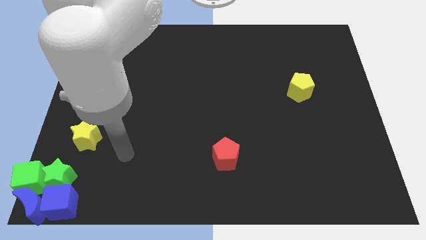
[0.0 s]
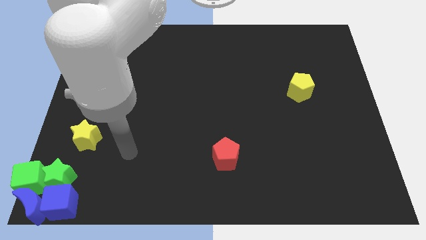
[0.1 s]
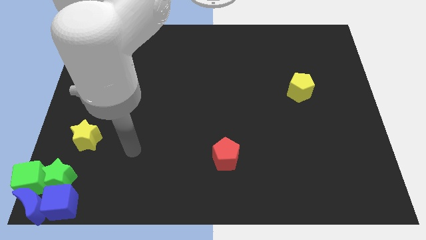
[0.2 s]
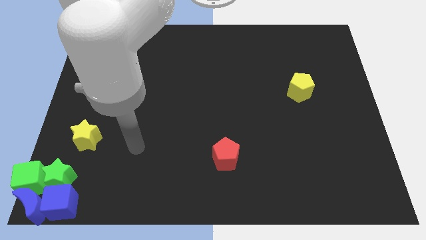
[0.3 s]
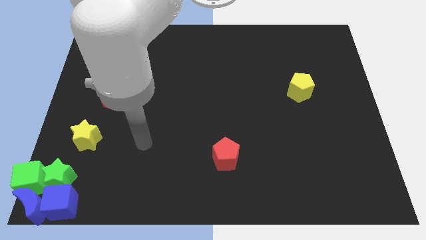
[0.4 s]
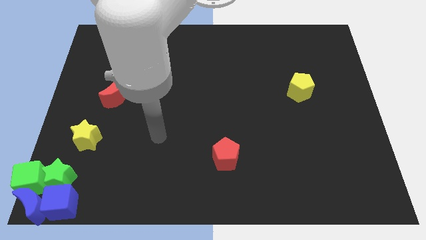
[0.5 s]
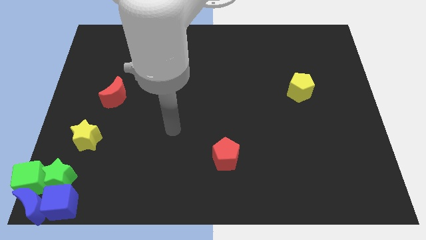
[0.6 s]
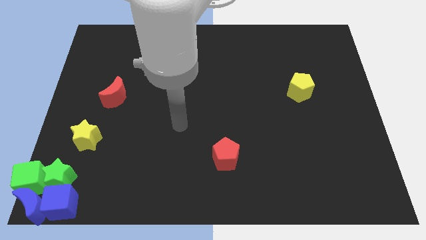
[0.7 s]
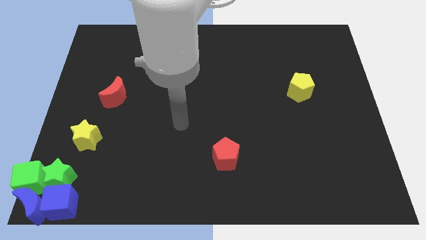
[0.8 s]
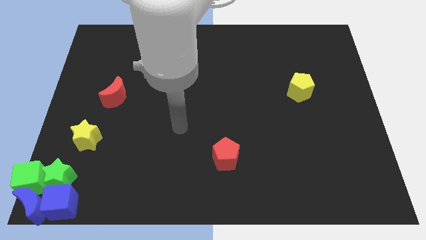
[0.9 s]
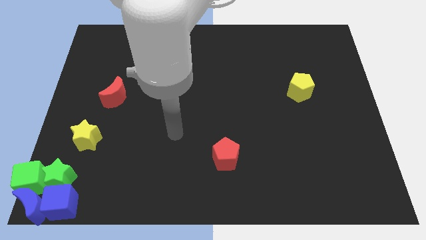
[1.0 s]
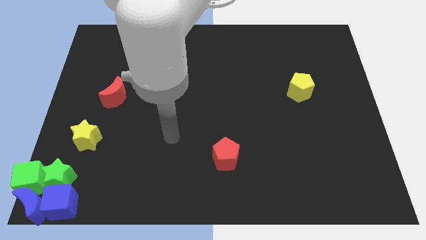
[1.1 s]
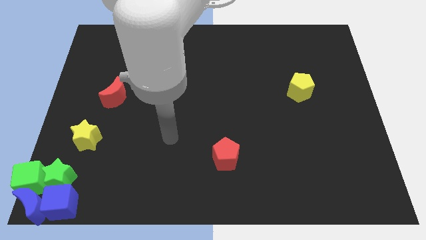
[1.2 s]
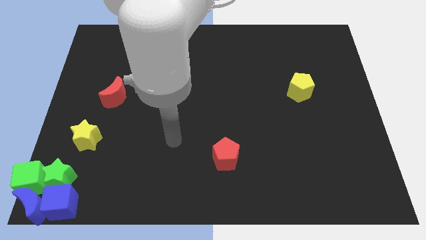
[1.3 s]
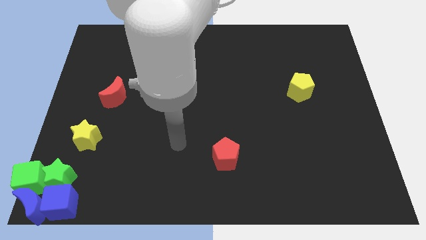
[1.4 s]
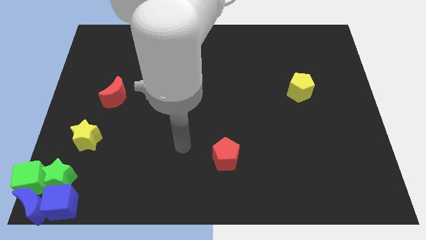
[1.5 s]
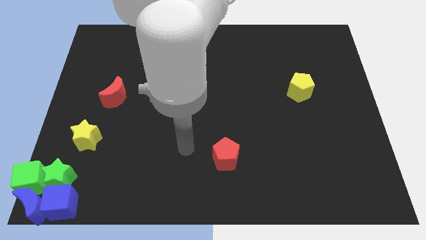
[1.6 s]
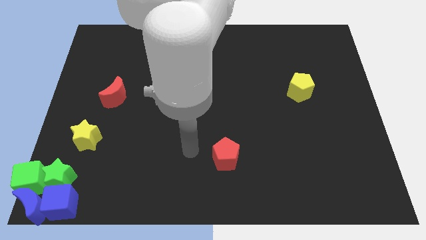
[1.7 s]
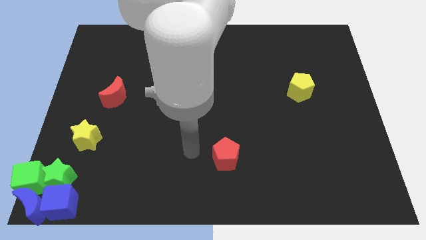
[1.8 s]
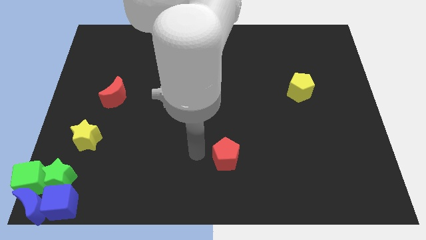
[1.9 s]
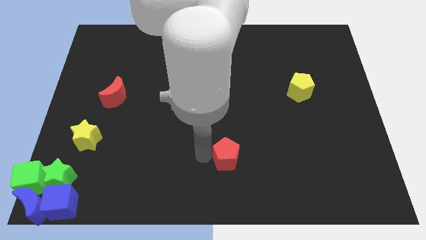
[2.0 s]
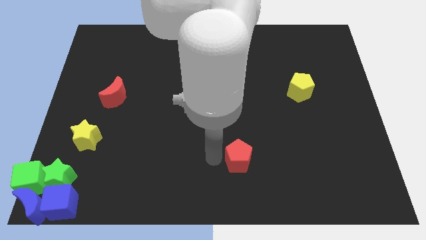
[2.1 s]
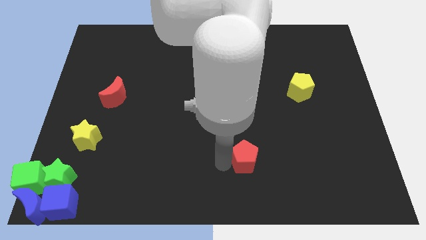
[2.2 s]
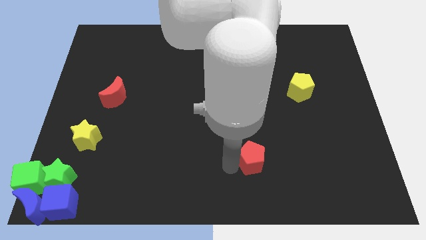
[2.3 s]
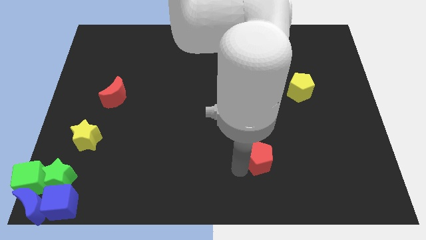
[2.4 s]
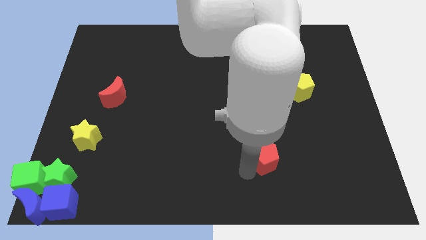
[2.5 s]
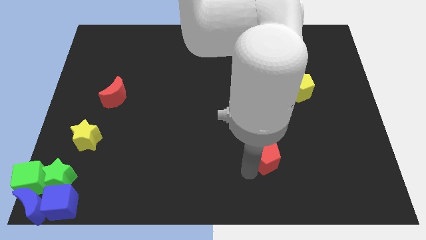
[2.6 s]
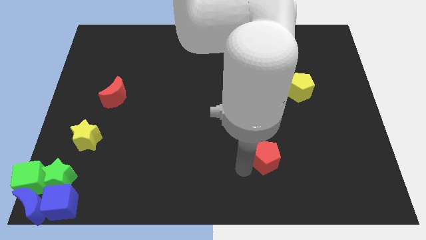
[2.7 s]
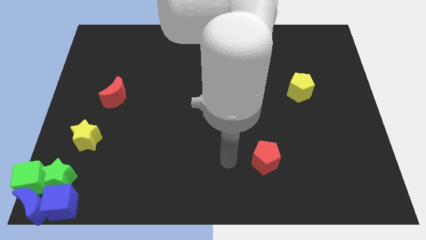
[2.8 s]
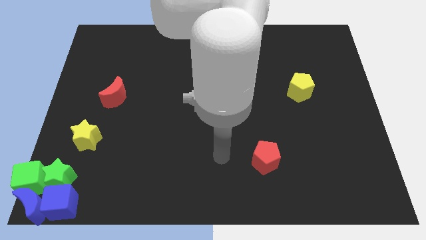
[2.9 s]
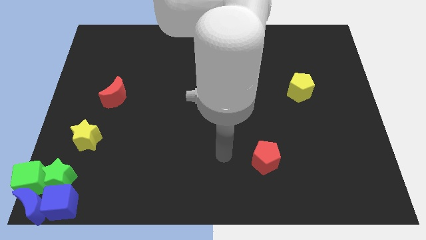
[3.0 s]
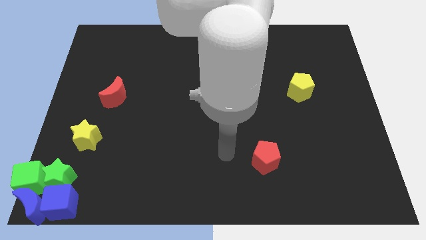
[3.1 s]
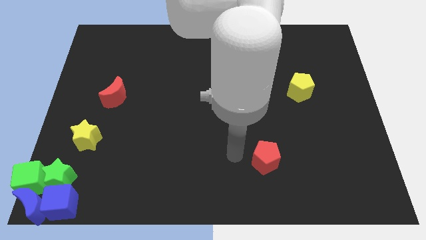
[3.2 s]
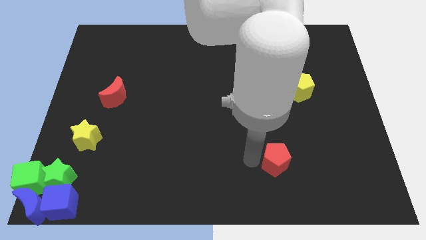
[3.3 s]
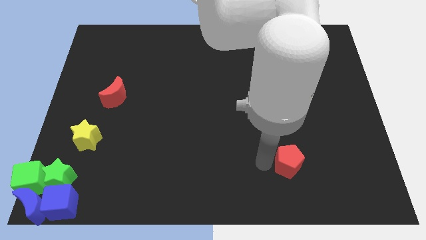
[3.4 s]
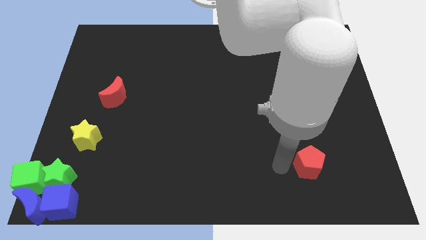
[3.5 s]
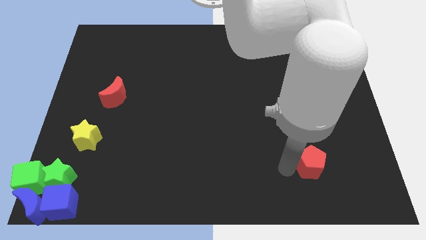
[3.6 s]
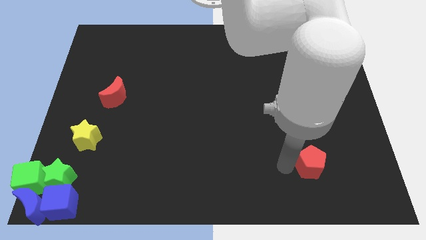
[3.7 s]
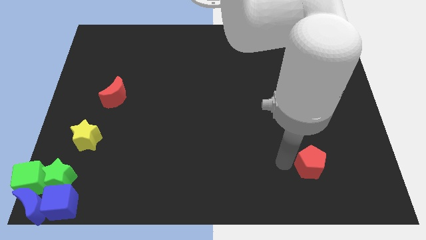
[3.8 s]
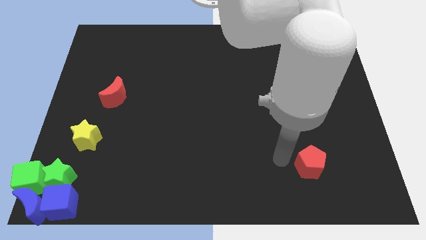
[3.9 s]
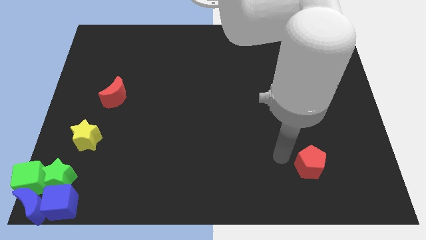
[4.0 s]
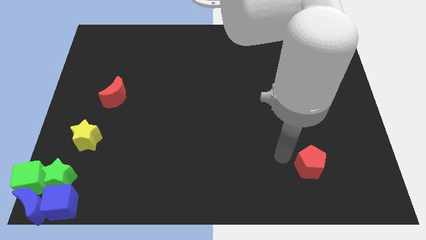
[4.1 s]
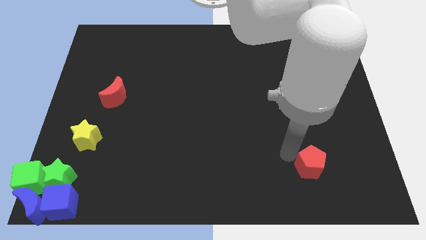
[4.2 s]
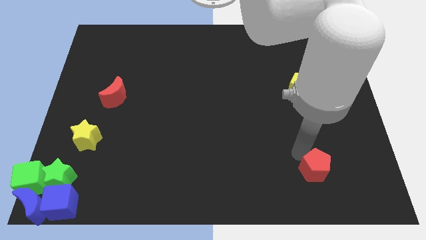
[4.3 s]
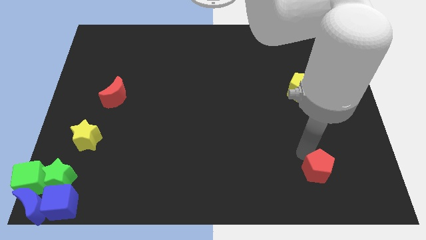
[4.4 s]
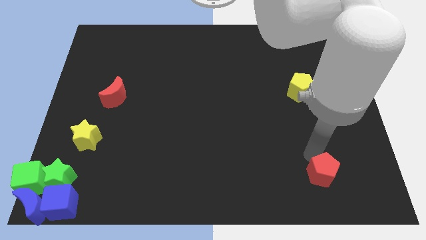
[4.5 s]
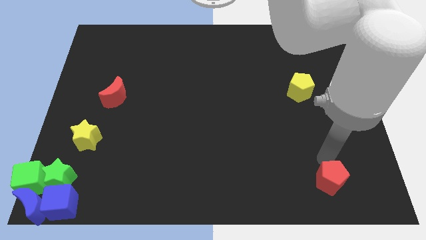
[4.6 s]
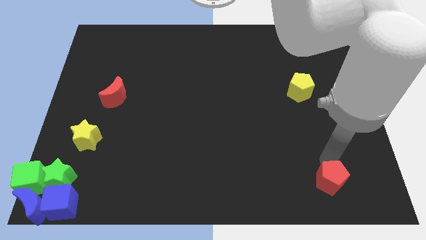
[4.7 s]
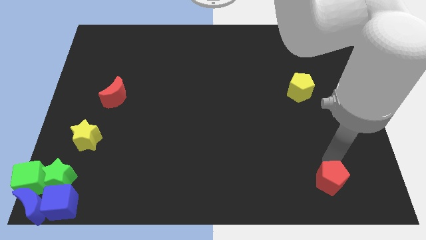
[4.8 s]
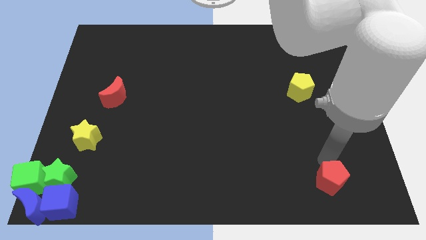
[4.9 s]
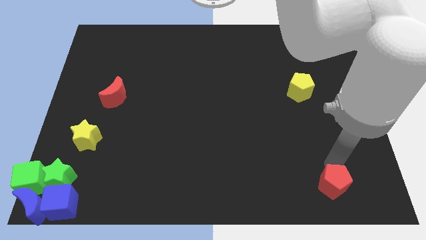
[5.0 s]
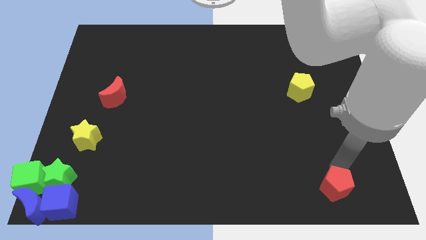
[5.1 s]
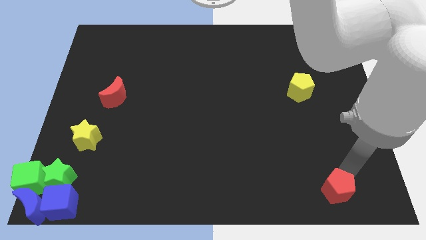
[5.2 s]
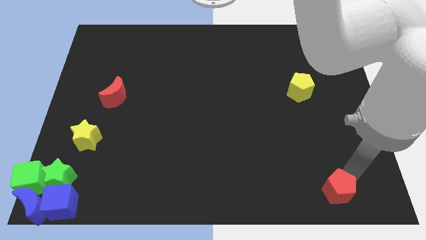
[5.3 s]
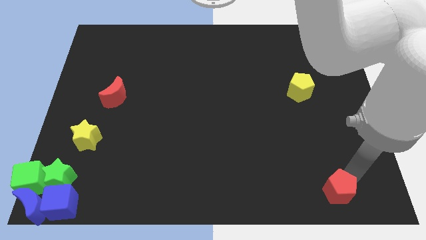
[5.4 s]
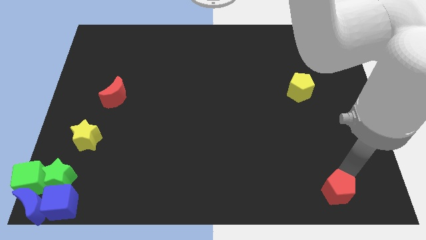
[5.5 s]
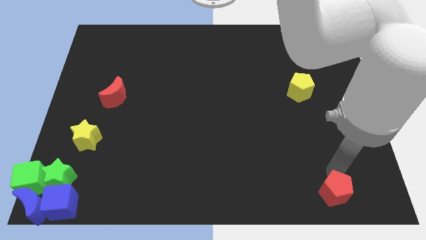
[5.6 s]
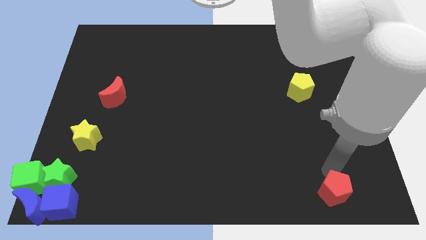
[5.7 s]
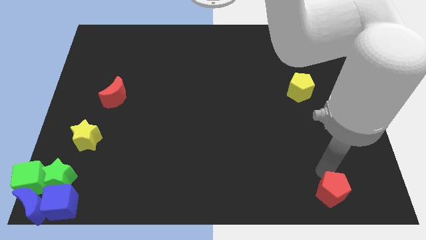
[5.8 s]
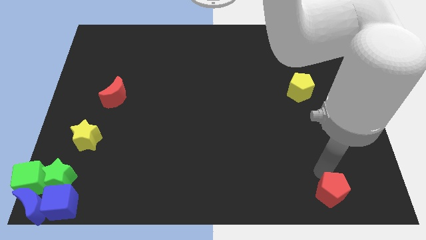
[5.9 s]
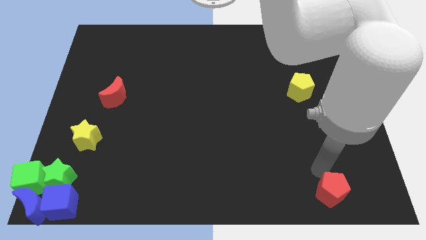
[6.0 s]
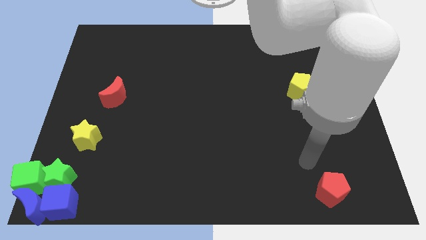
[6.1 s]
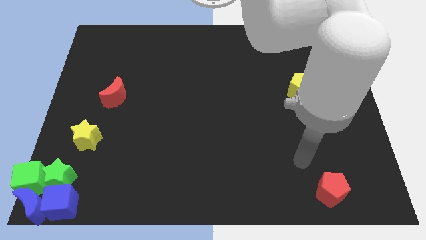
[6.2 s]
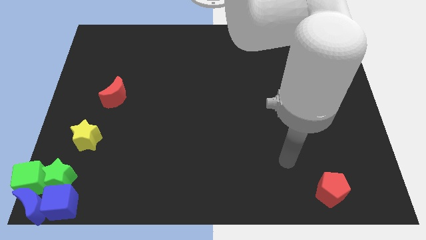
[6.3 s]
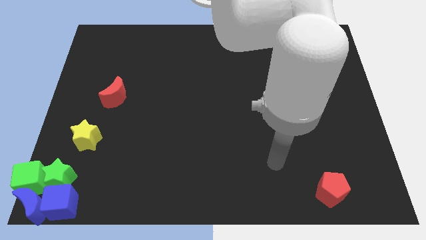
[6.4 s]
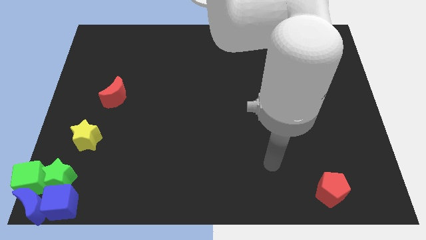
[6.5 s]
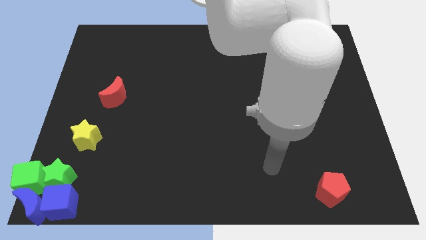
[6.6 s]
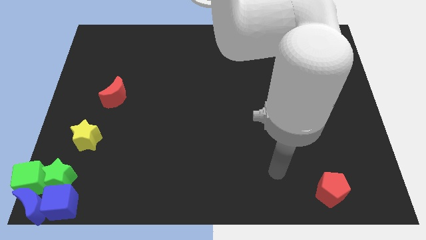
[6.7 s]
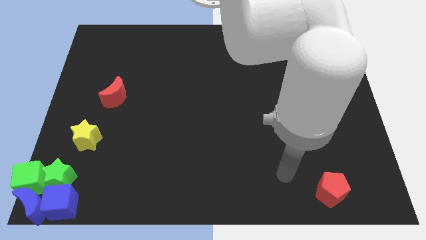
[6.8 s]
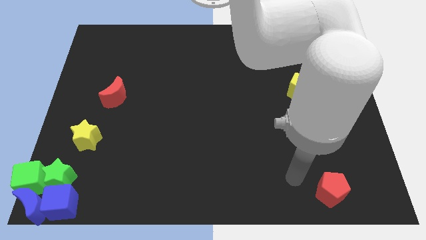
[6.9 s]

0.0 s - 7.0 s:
move the red pentagon towards the bottom right of the board

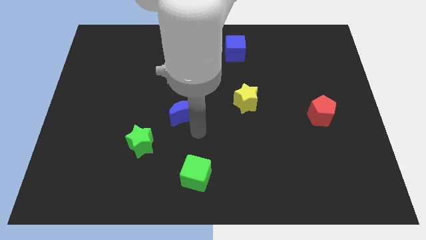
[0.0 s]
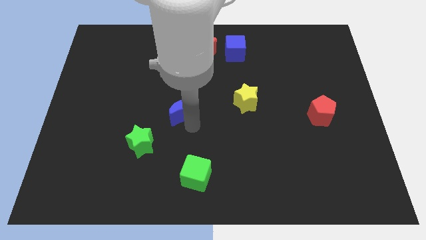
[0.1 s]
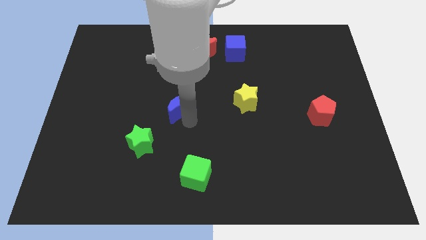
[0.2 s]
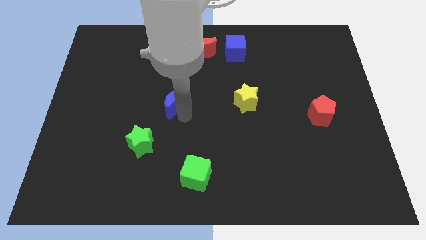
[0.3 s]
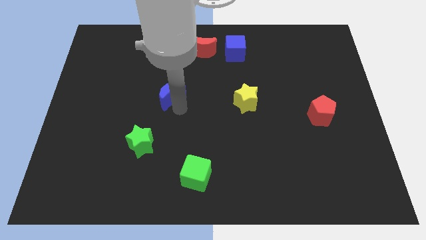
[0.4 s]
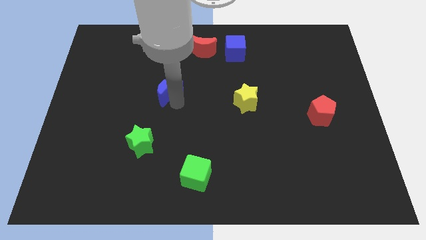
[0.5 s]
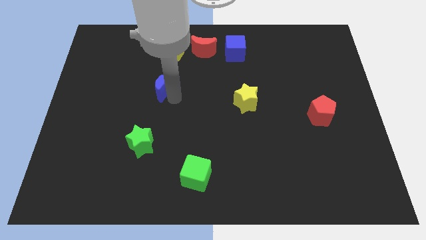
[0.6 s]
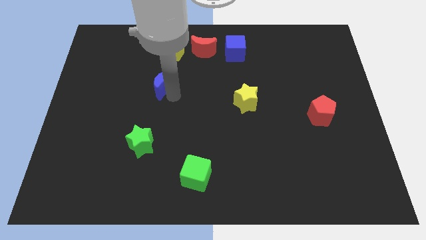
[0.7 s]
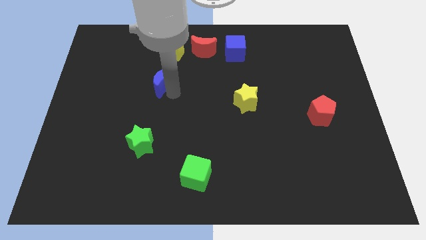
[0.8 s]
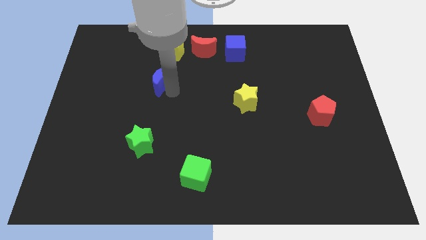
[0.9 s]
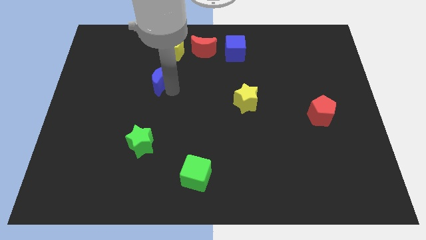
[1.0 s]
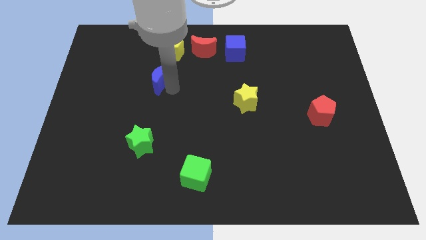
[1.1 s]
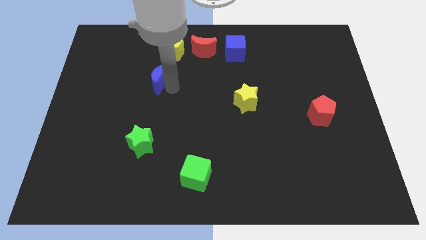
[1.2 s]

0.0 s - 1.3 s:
move blue moon towards yellow pentagon

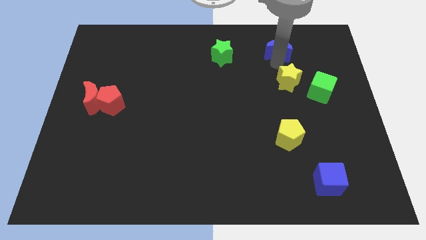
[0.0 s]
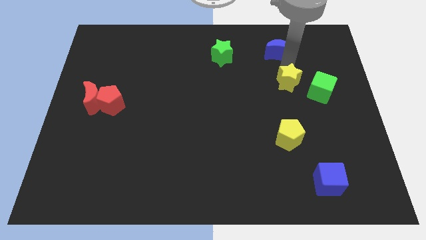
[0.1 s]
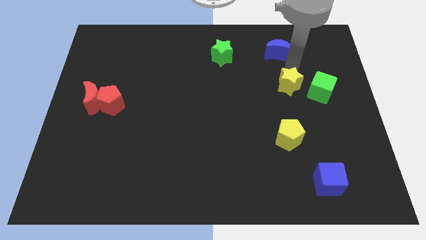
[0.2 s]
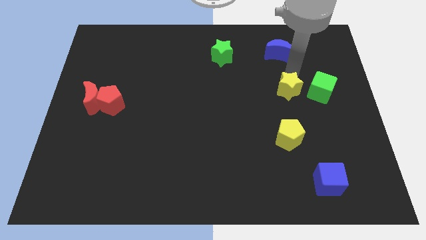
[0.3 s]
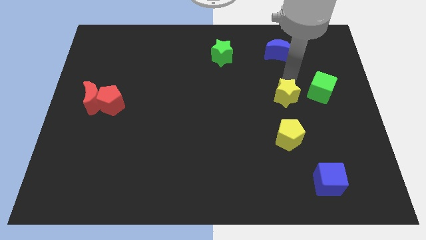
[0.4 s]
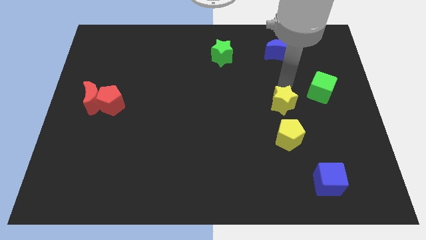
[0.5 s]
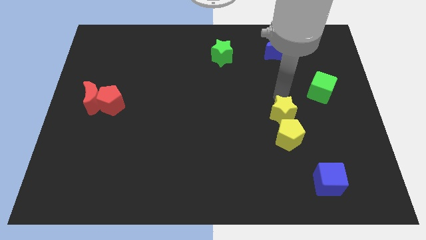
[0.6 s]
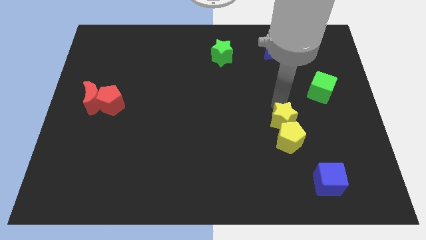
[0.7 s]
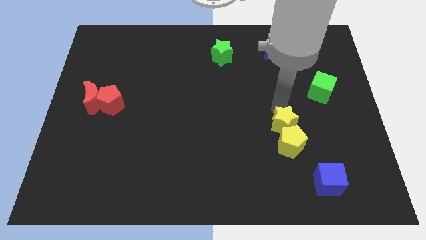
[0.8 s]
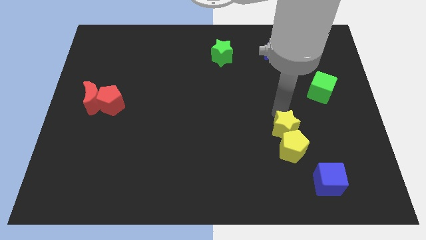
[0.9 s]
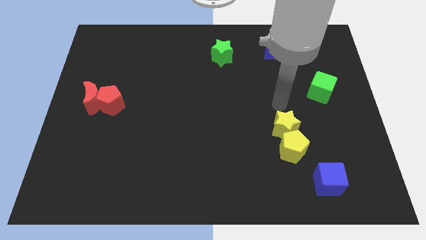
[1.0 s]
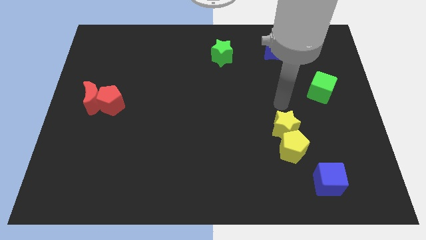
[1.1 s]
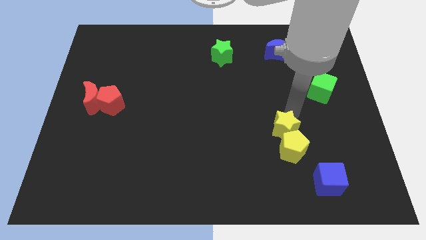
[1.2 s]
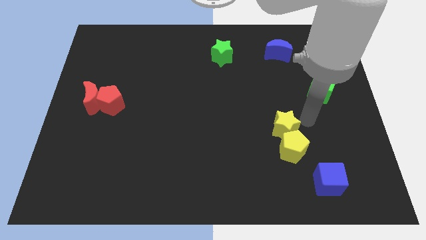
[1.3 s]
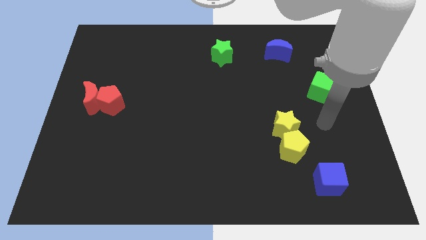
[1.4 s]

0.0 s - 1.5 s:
push the yellow star into yellow pentagon
